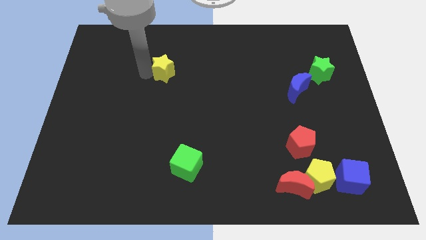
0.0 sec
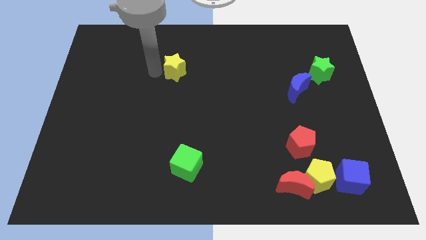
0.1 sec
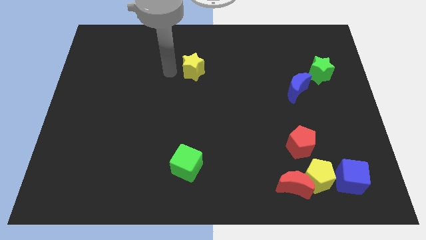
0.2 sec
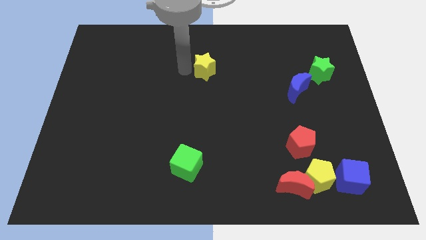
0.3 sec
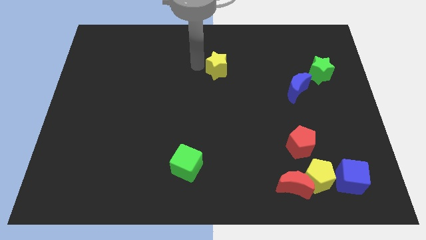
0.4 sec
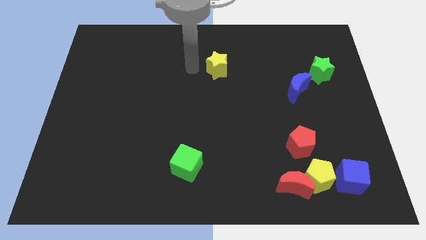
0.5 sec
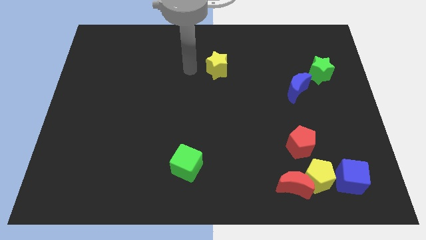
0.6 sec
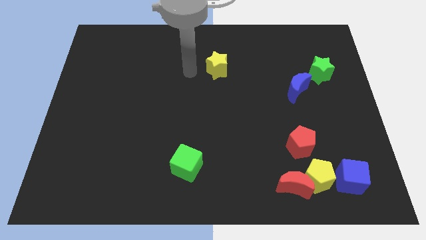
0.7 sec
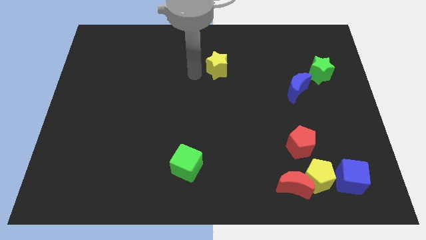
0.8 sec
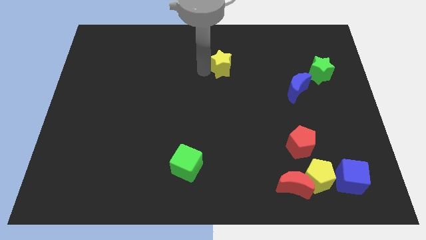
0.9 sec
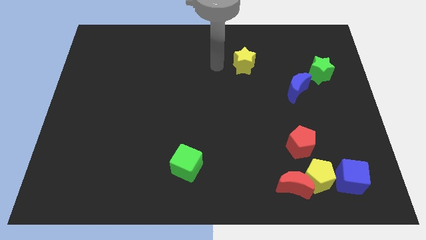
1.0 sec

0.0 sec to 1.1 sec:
slide yellow star on right side

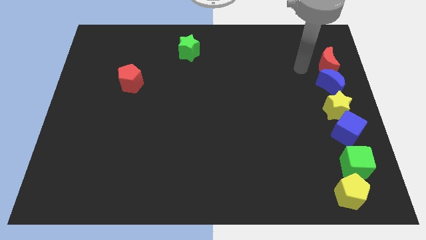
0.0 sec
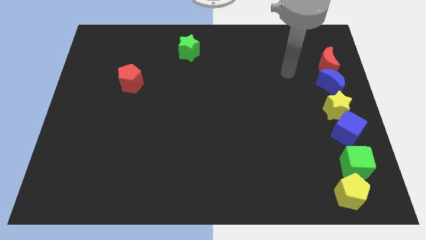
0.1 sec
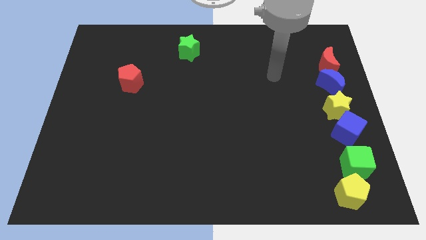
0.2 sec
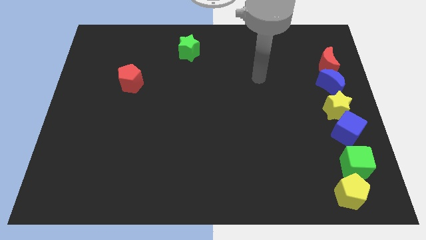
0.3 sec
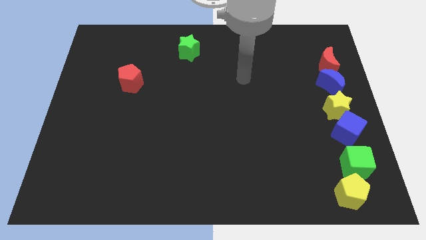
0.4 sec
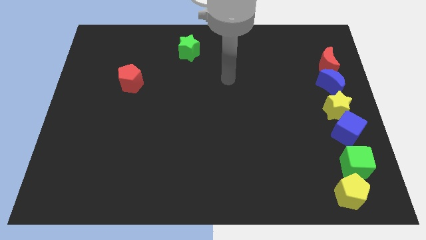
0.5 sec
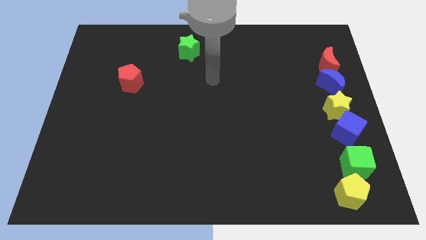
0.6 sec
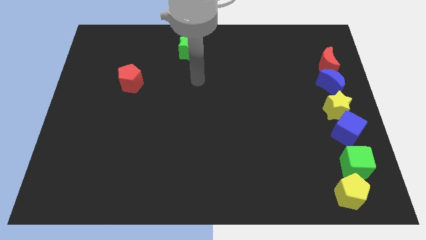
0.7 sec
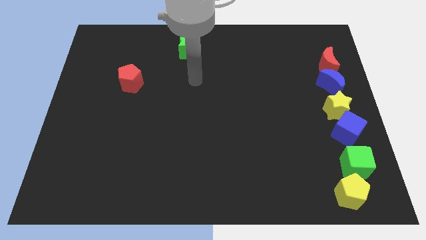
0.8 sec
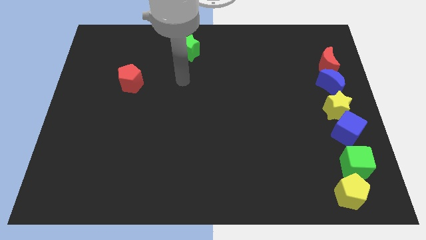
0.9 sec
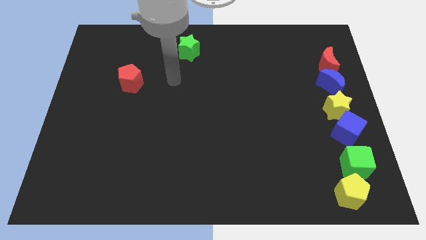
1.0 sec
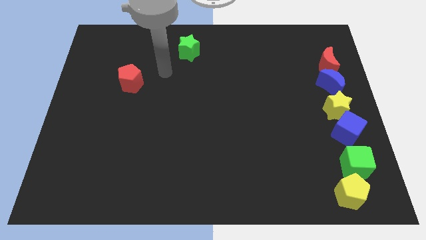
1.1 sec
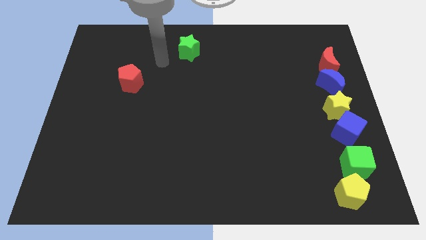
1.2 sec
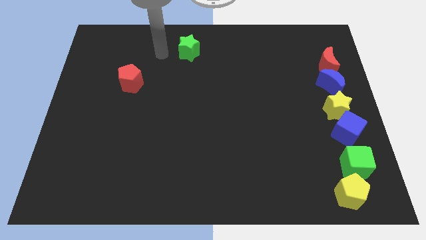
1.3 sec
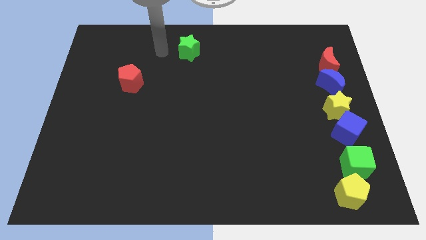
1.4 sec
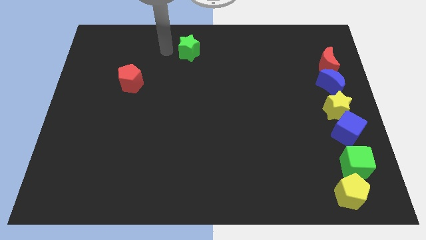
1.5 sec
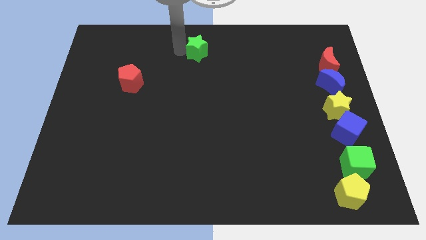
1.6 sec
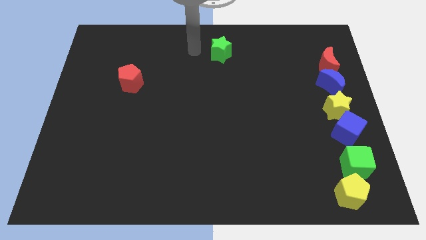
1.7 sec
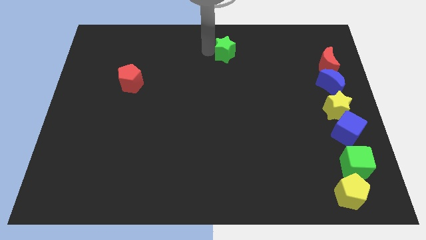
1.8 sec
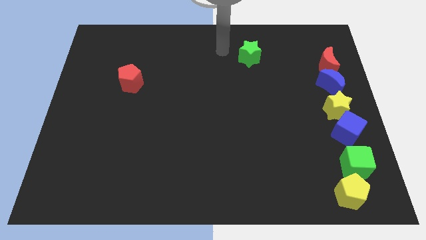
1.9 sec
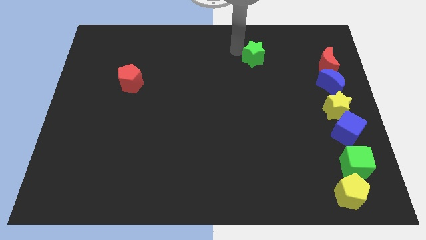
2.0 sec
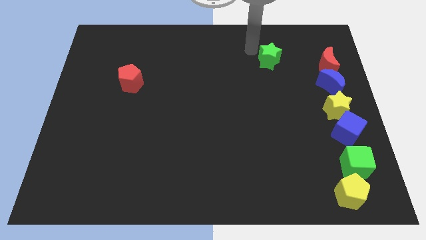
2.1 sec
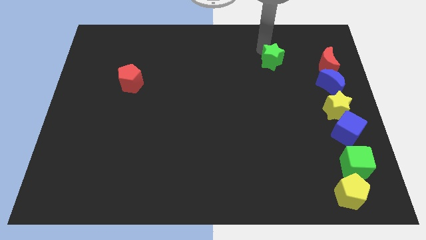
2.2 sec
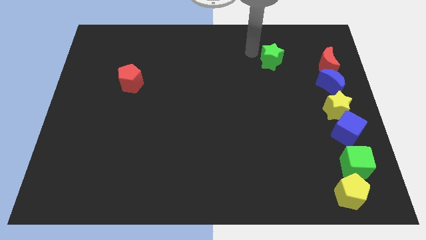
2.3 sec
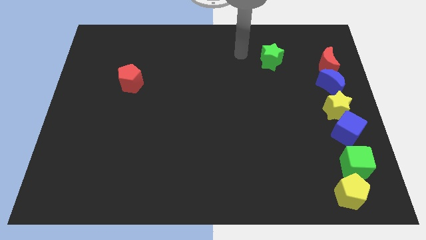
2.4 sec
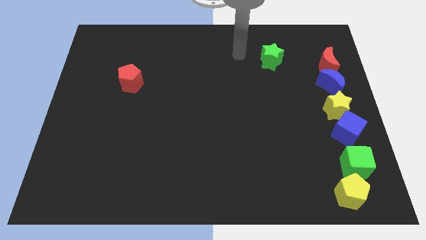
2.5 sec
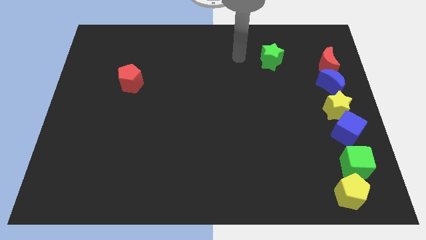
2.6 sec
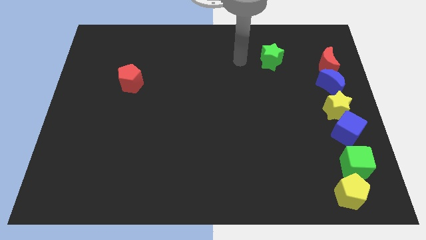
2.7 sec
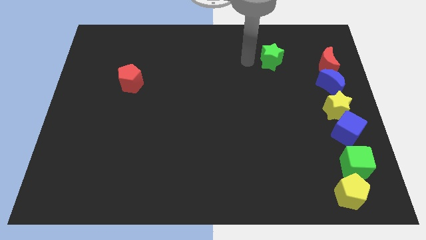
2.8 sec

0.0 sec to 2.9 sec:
place the green star parallel to red moon

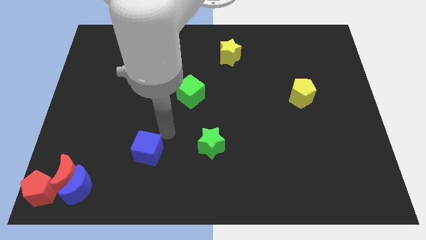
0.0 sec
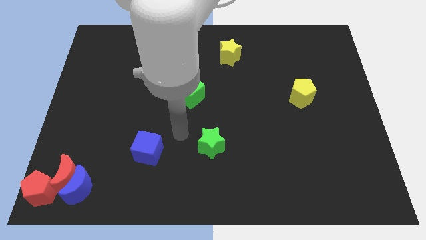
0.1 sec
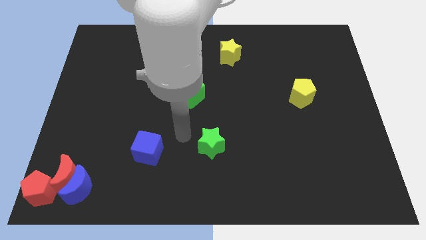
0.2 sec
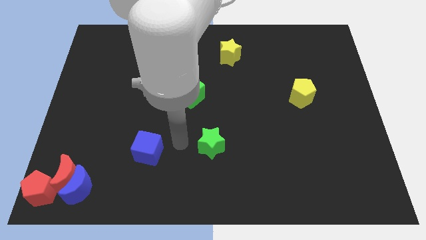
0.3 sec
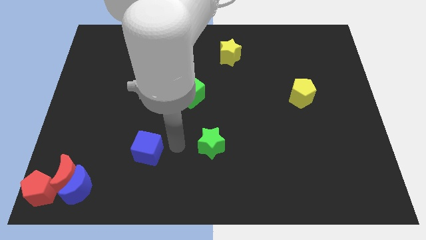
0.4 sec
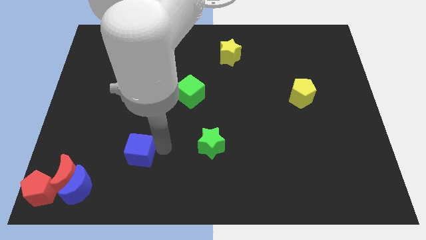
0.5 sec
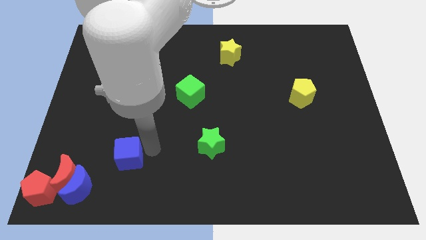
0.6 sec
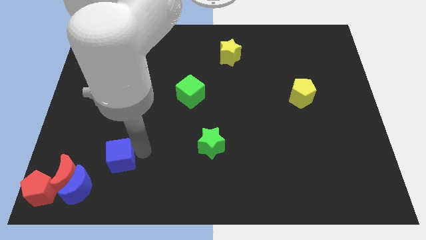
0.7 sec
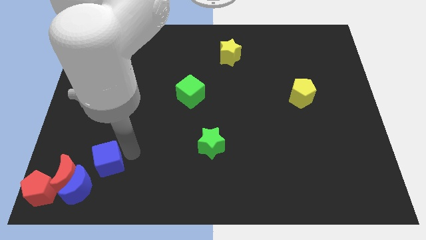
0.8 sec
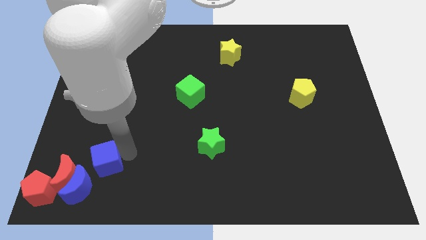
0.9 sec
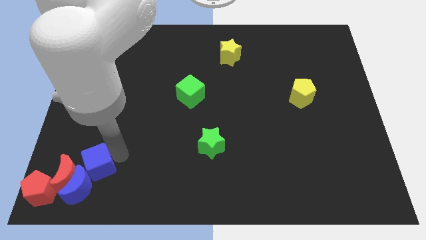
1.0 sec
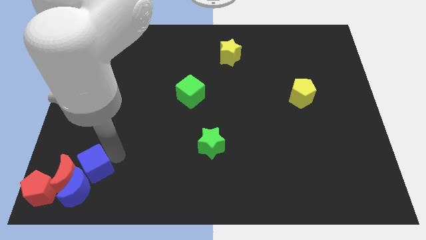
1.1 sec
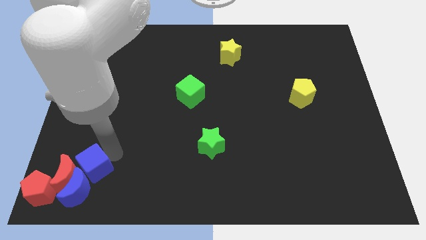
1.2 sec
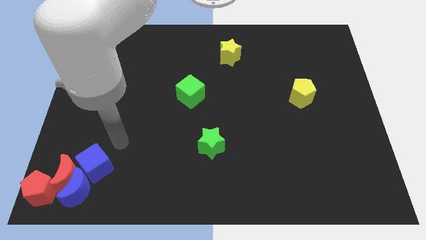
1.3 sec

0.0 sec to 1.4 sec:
push blue cube towards the blue crescent

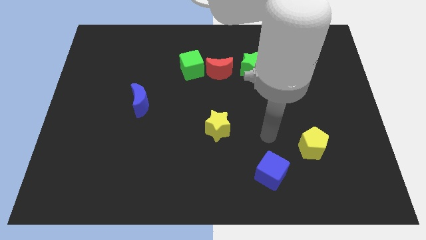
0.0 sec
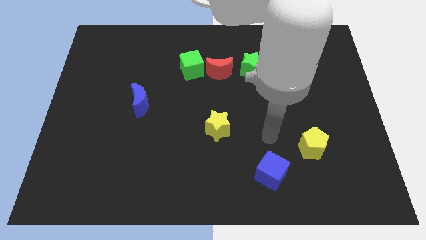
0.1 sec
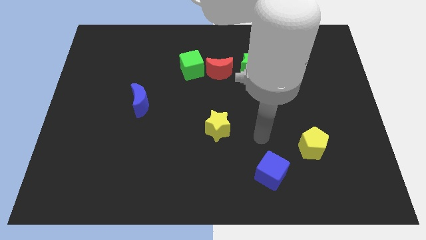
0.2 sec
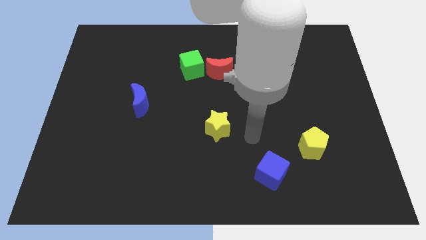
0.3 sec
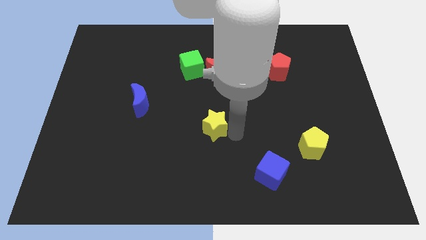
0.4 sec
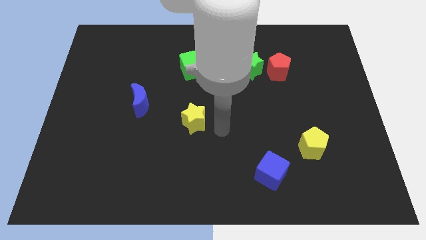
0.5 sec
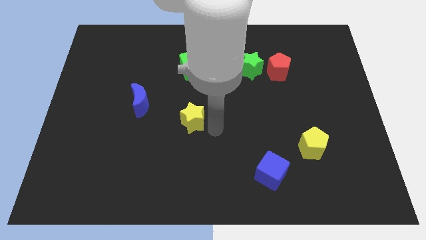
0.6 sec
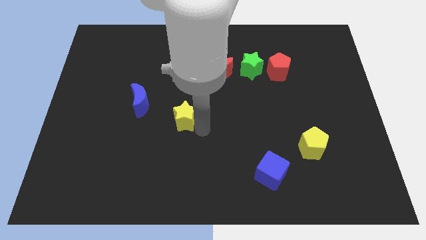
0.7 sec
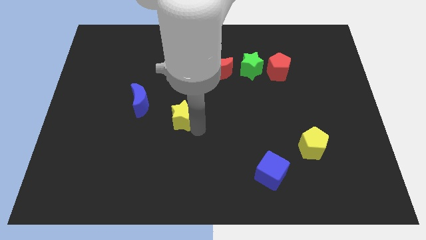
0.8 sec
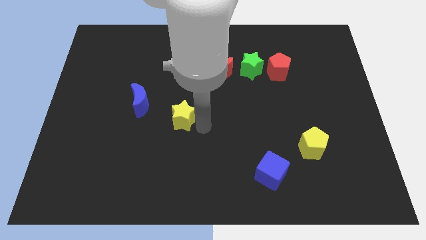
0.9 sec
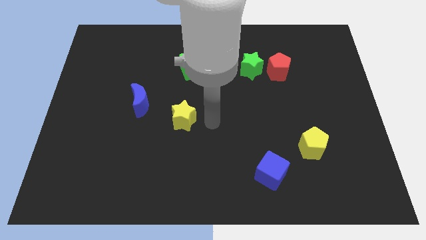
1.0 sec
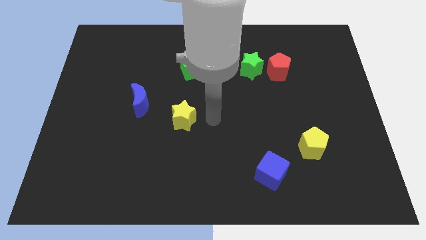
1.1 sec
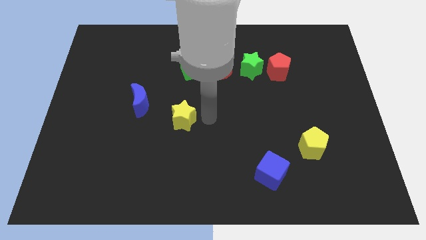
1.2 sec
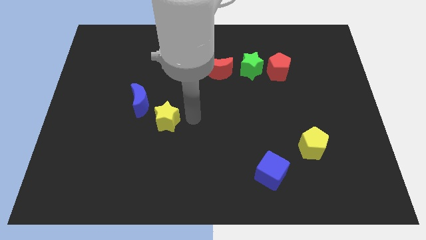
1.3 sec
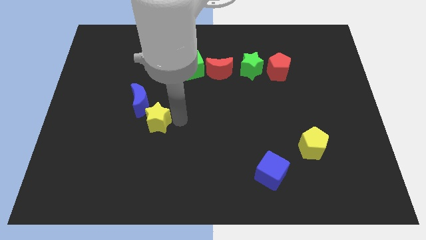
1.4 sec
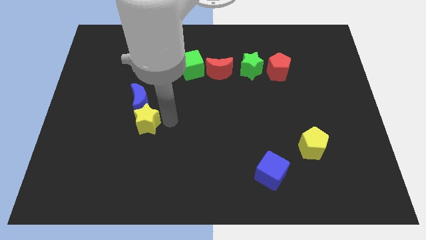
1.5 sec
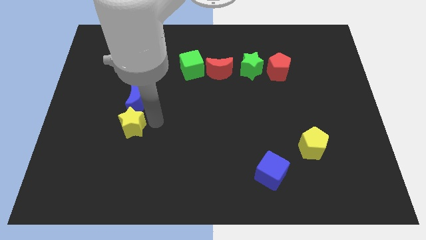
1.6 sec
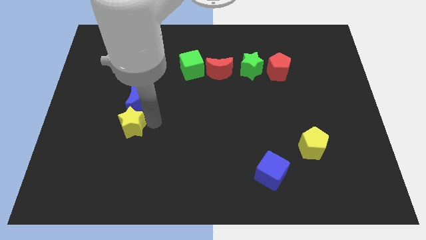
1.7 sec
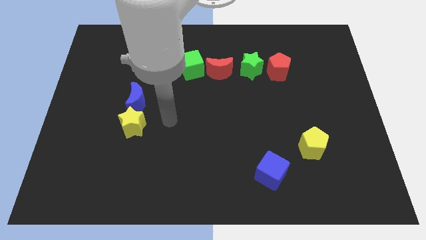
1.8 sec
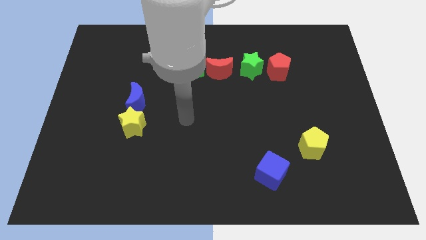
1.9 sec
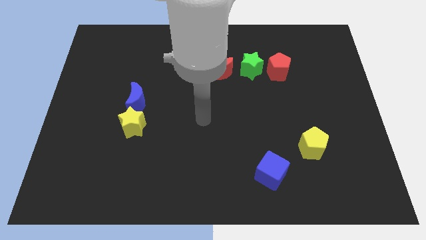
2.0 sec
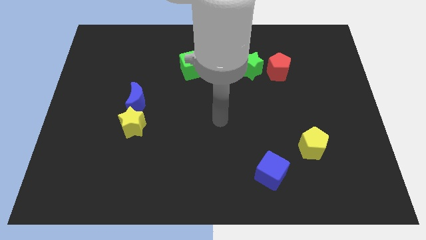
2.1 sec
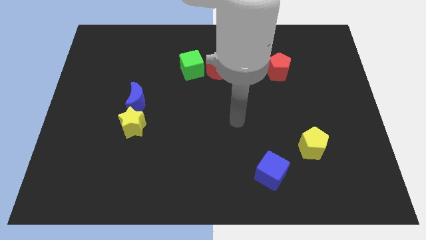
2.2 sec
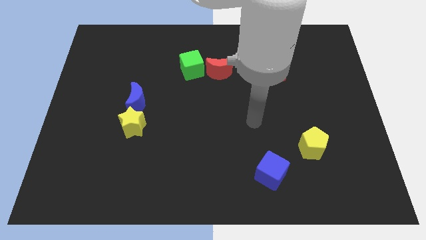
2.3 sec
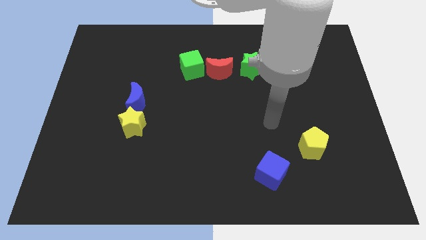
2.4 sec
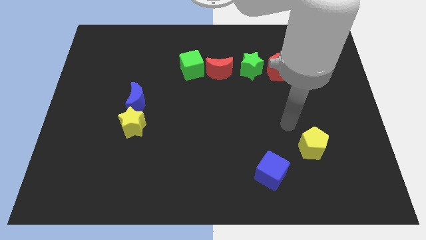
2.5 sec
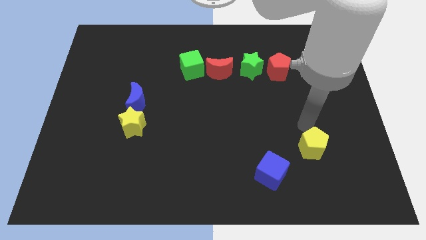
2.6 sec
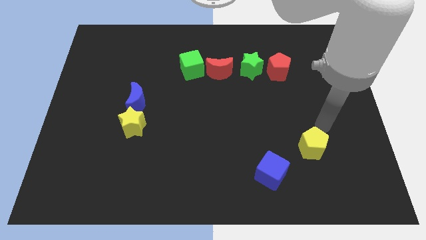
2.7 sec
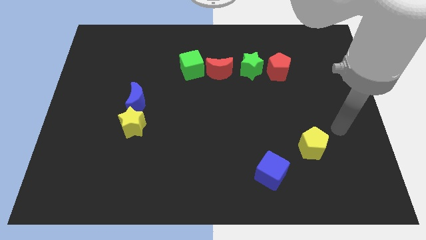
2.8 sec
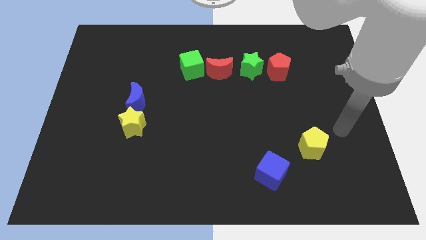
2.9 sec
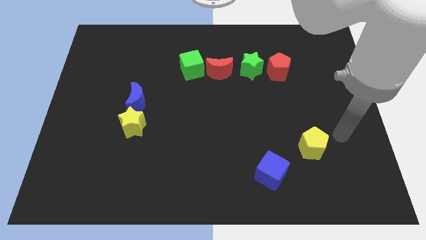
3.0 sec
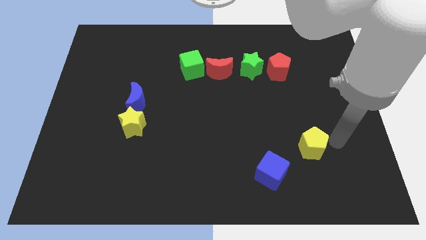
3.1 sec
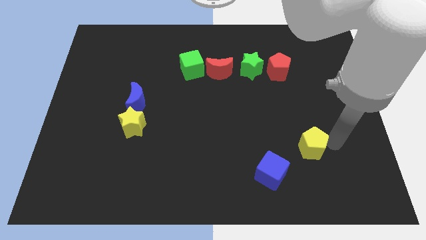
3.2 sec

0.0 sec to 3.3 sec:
place the yellow star to the bottom side of the blue crescent

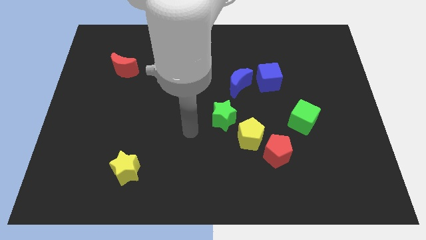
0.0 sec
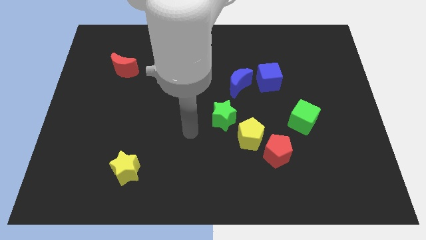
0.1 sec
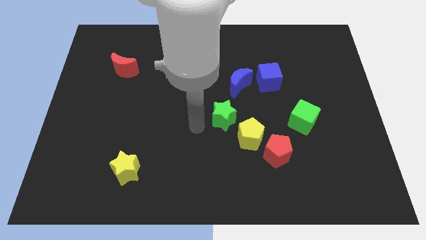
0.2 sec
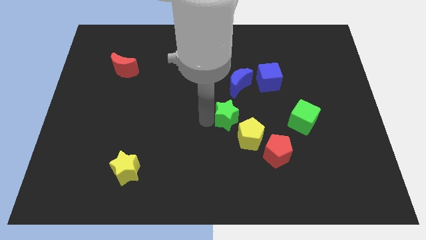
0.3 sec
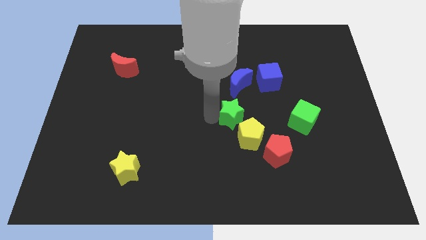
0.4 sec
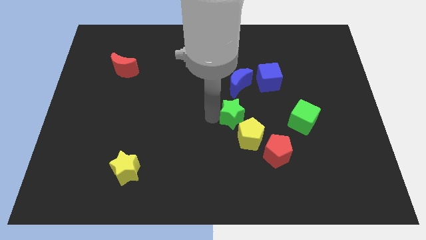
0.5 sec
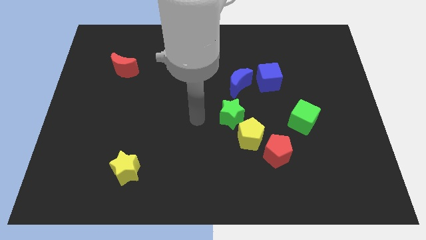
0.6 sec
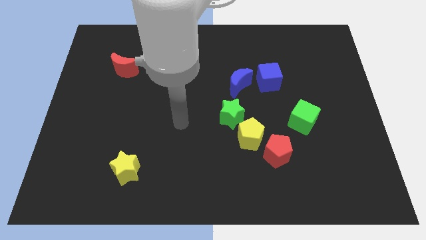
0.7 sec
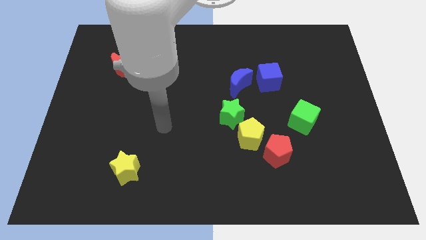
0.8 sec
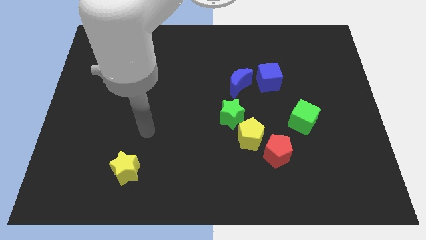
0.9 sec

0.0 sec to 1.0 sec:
place the gren star daiagonally top left yellow pentagon
